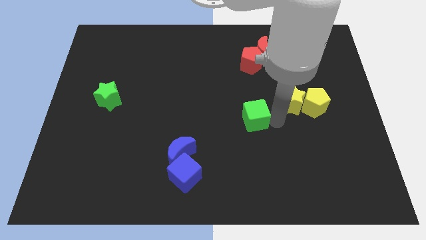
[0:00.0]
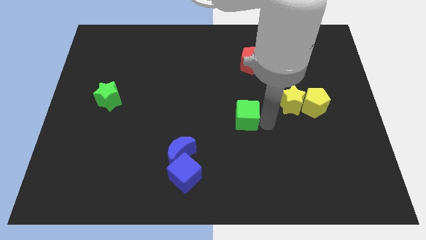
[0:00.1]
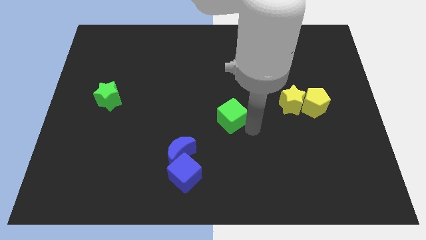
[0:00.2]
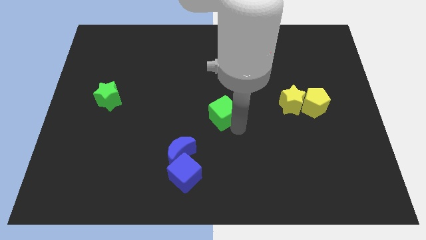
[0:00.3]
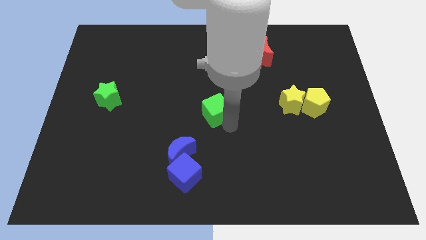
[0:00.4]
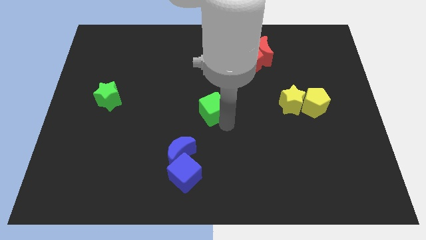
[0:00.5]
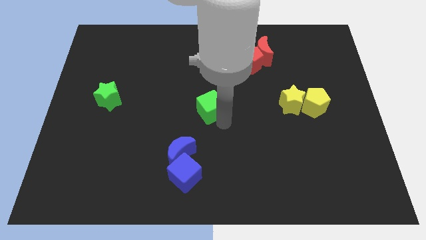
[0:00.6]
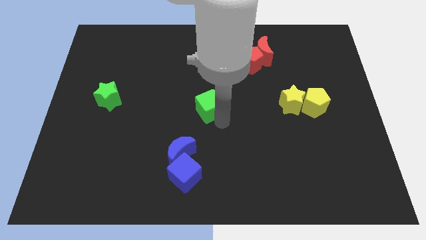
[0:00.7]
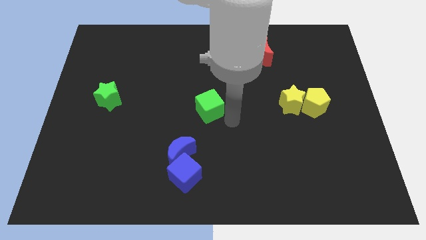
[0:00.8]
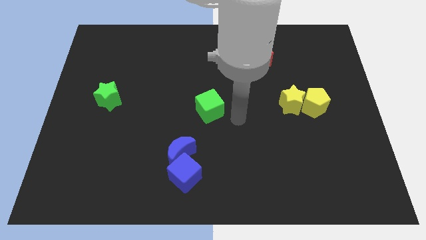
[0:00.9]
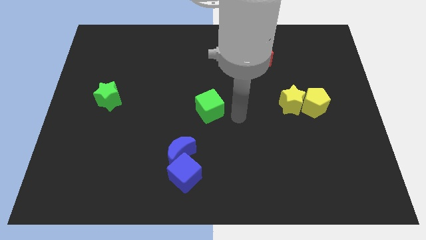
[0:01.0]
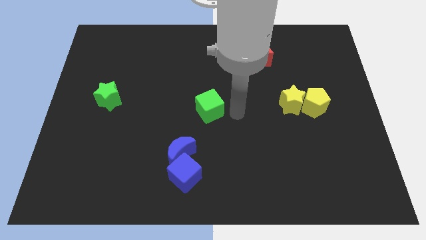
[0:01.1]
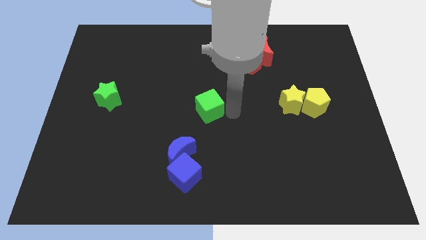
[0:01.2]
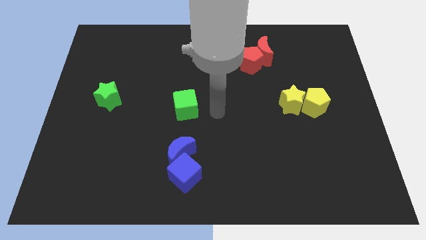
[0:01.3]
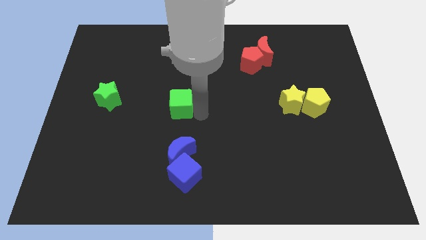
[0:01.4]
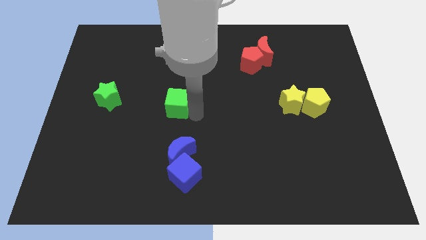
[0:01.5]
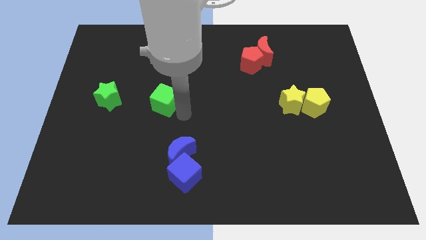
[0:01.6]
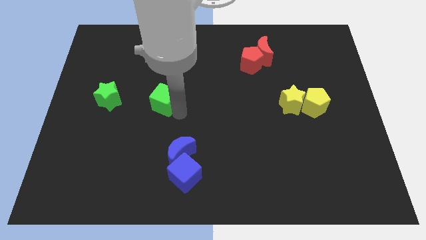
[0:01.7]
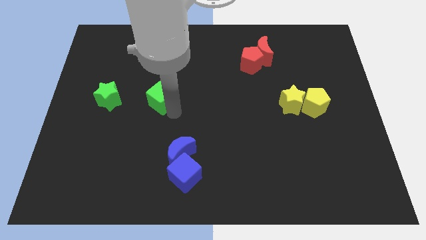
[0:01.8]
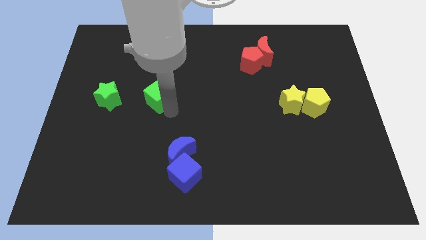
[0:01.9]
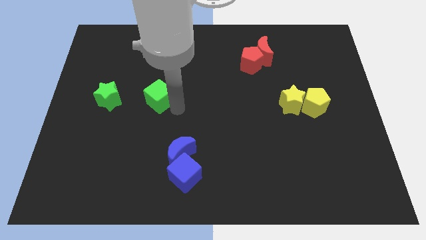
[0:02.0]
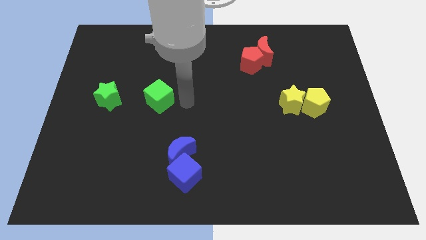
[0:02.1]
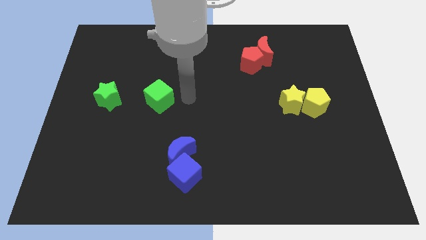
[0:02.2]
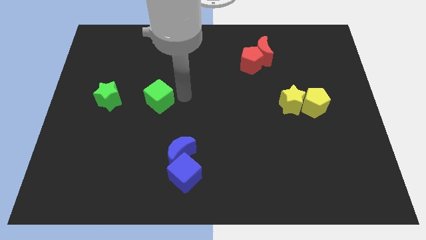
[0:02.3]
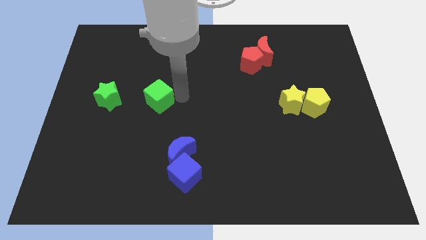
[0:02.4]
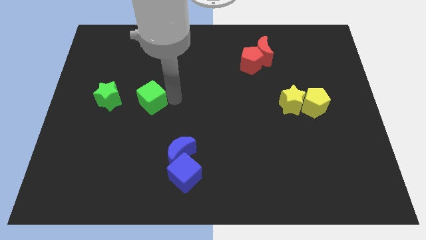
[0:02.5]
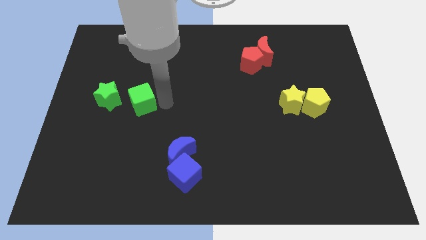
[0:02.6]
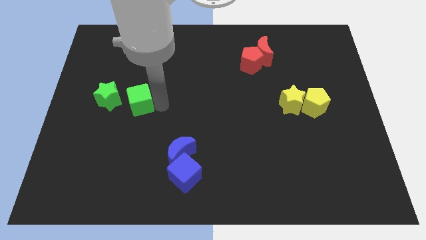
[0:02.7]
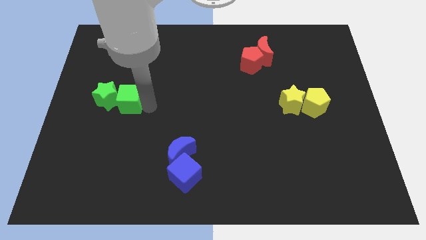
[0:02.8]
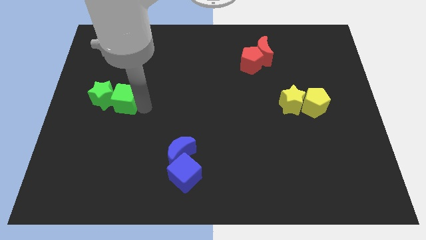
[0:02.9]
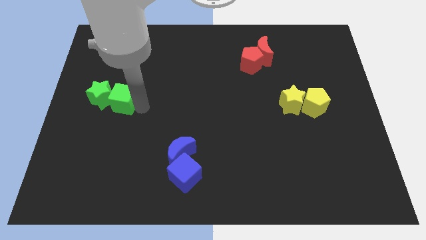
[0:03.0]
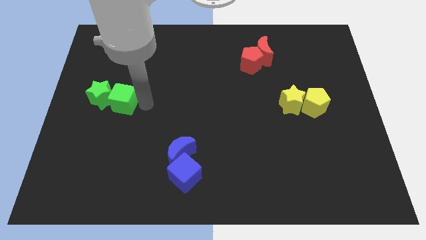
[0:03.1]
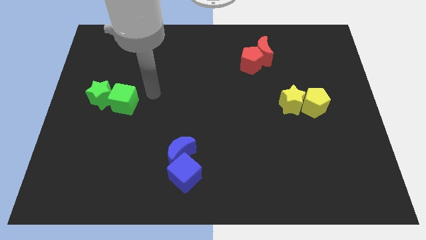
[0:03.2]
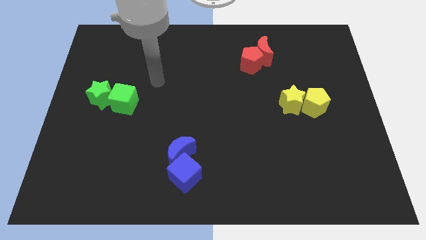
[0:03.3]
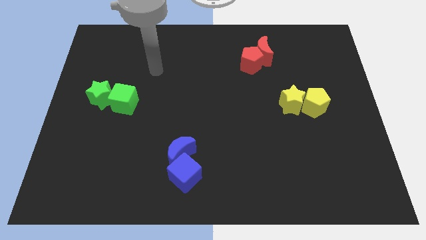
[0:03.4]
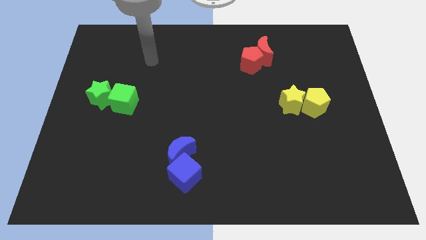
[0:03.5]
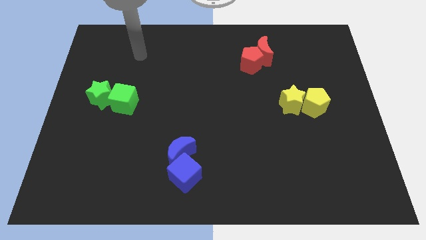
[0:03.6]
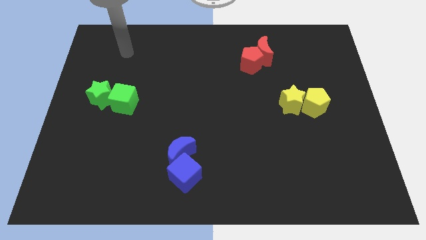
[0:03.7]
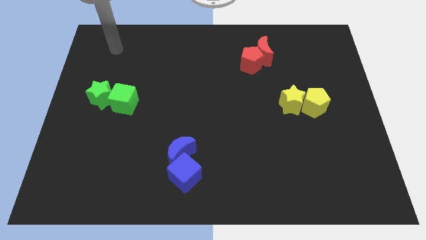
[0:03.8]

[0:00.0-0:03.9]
push green cube to the right of green star

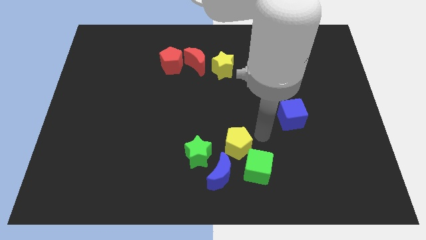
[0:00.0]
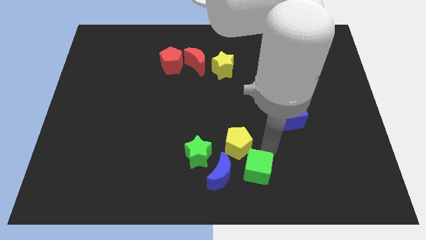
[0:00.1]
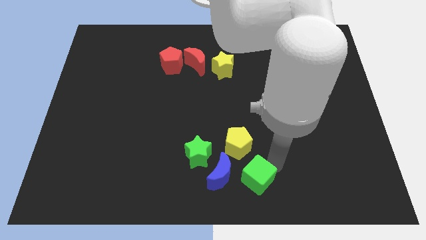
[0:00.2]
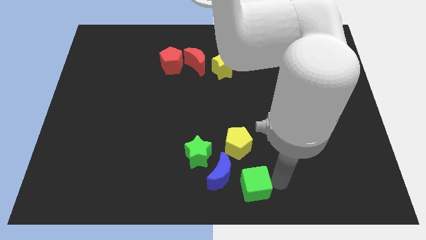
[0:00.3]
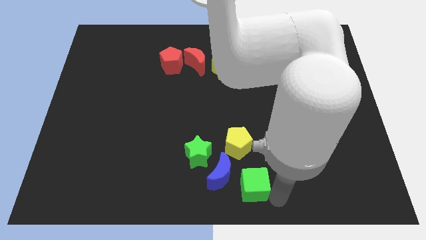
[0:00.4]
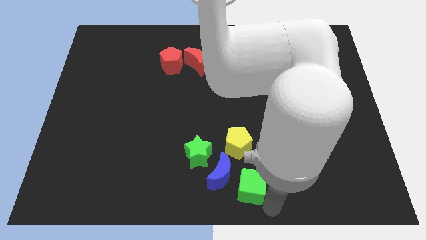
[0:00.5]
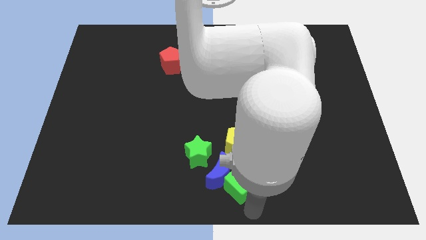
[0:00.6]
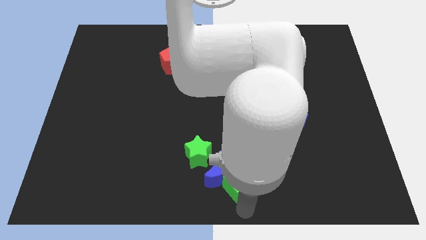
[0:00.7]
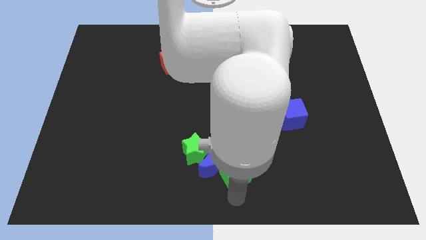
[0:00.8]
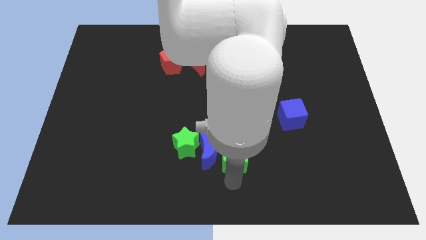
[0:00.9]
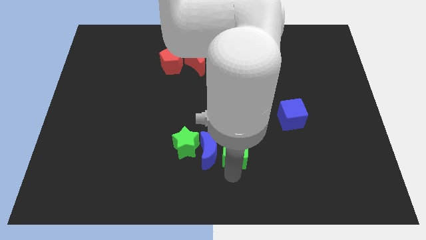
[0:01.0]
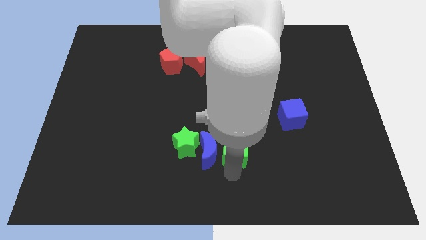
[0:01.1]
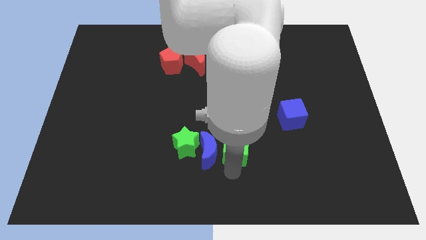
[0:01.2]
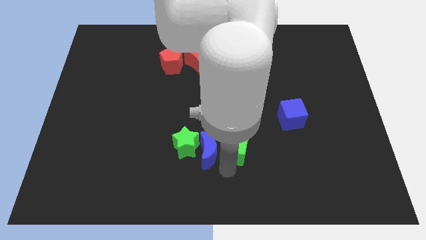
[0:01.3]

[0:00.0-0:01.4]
push green cube into yellow pentagon

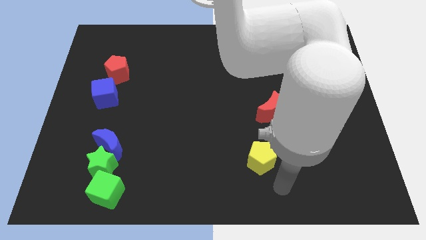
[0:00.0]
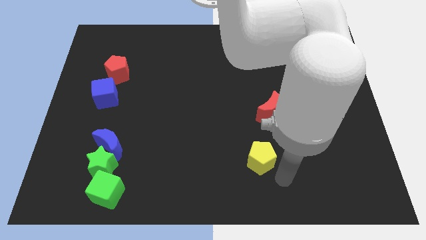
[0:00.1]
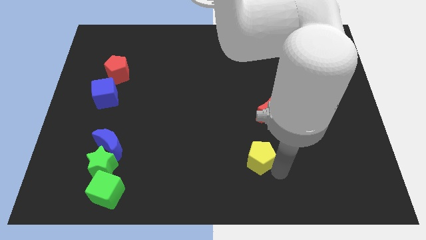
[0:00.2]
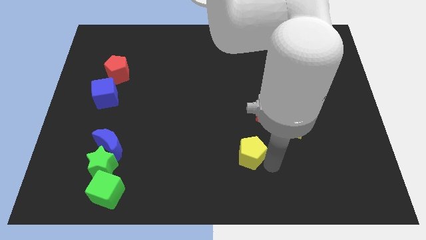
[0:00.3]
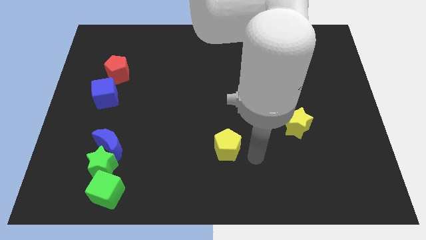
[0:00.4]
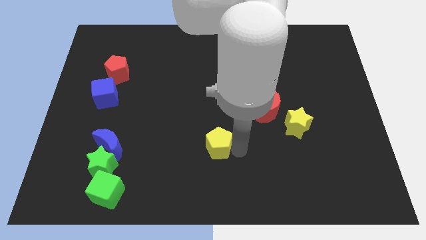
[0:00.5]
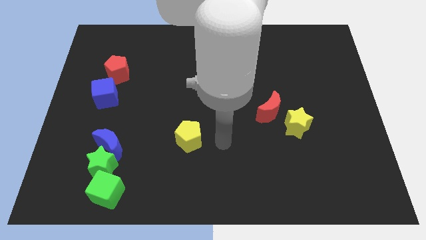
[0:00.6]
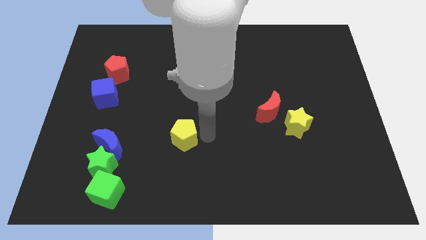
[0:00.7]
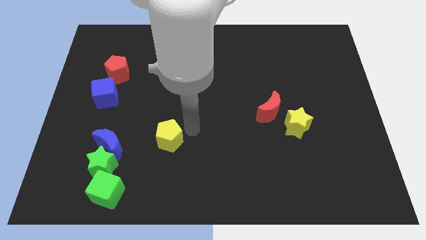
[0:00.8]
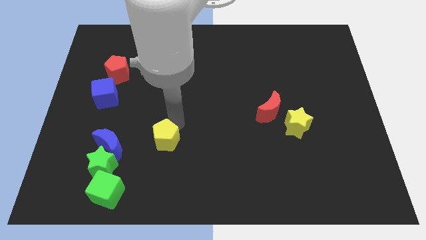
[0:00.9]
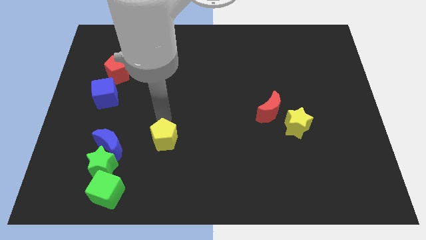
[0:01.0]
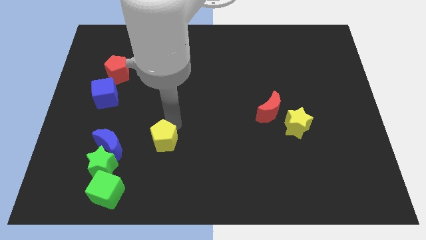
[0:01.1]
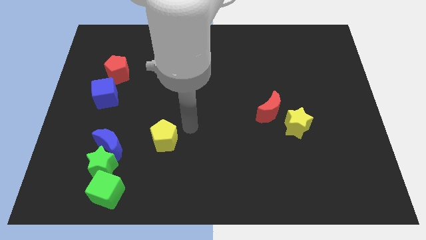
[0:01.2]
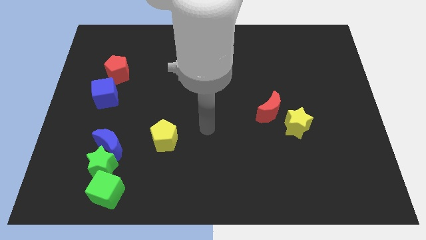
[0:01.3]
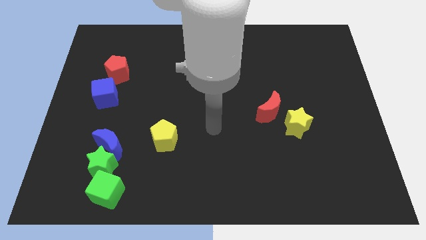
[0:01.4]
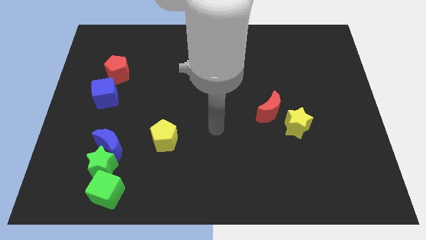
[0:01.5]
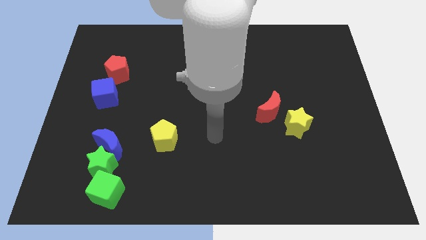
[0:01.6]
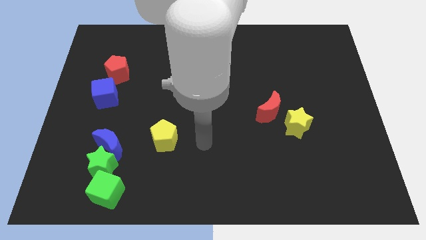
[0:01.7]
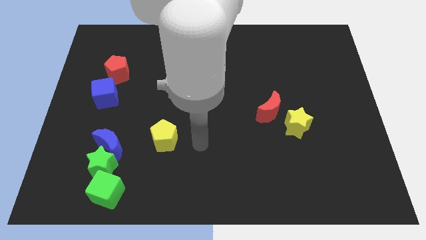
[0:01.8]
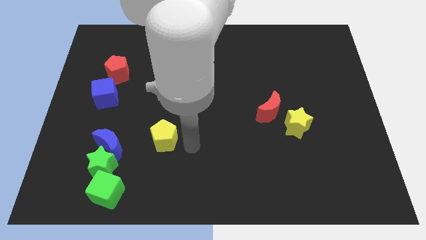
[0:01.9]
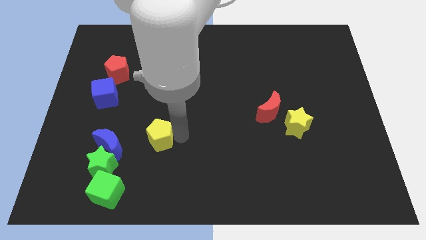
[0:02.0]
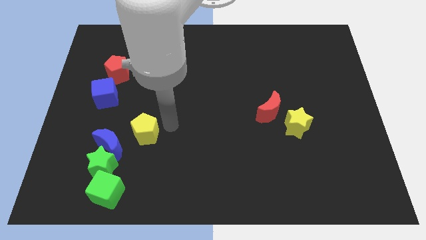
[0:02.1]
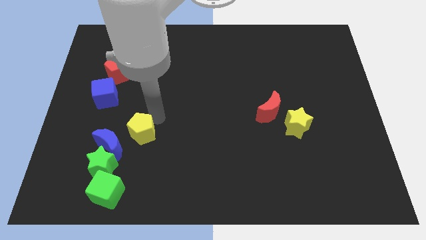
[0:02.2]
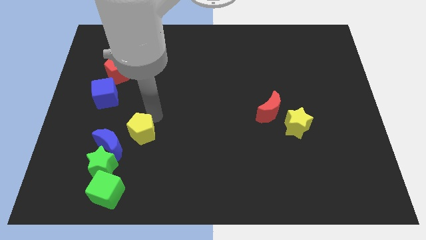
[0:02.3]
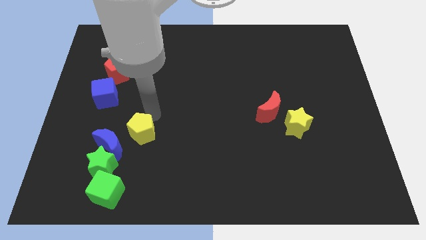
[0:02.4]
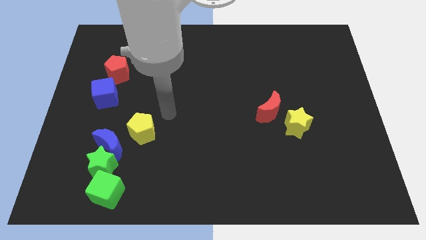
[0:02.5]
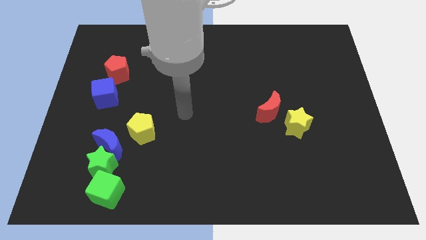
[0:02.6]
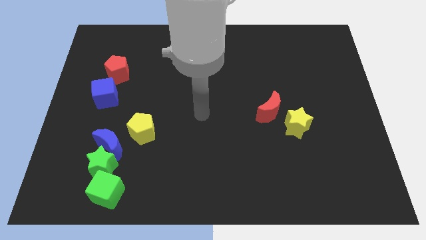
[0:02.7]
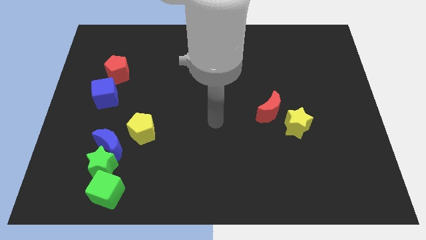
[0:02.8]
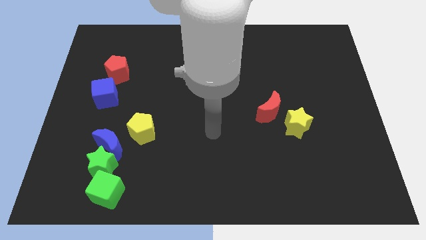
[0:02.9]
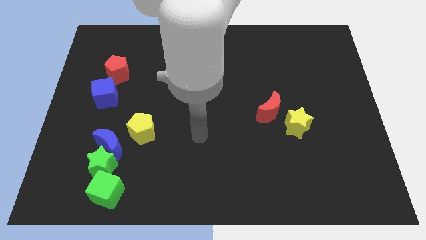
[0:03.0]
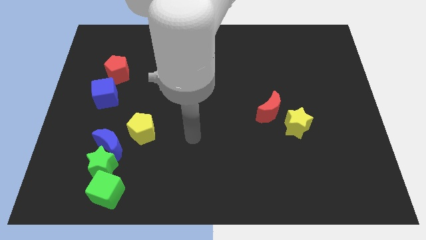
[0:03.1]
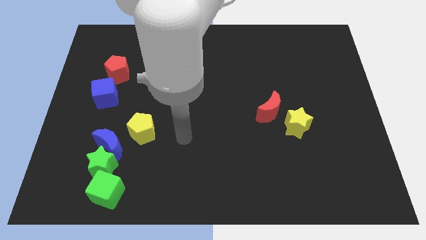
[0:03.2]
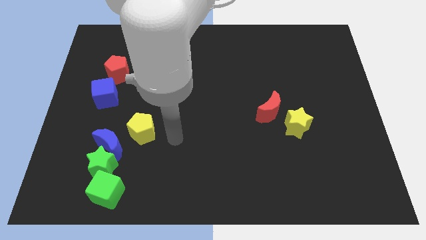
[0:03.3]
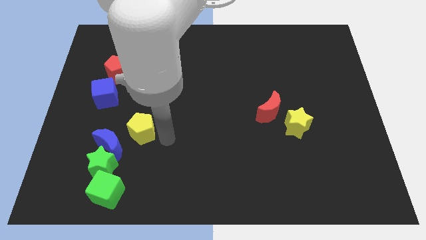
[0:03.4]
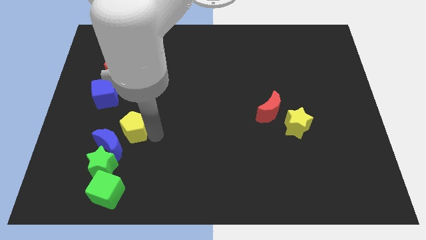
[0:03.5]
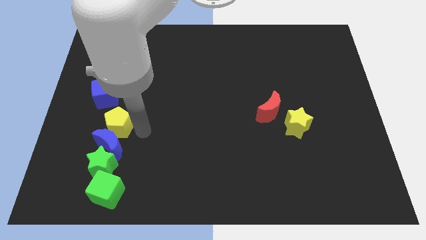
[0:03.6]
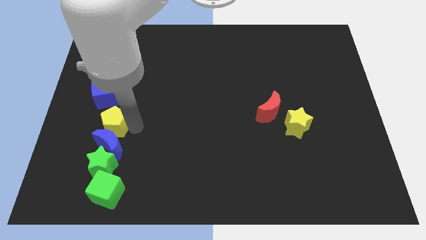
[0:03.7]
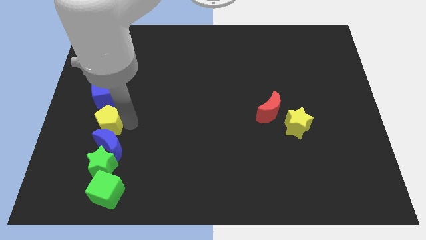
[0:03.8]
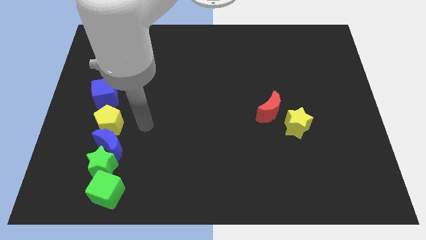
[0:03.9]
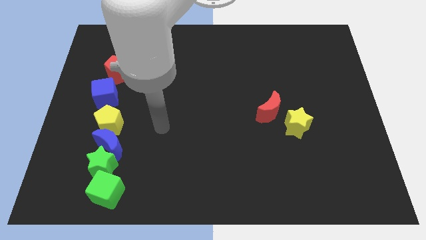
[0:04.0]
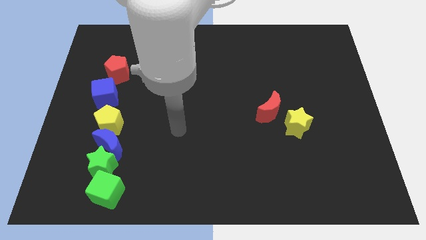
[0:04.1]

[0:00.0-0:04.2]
place the yellow pentagon in between blue cube and blue moon
